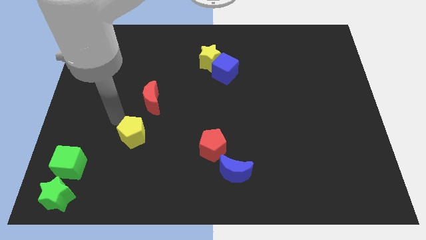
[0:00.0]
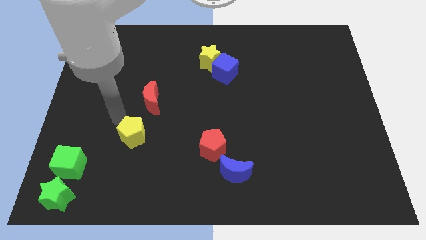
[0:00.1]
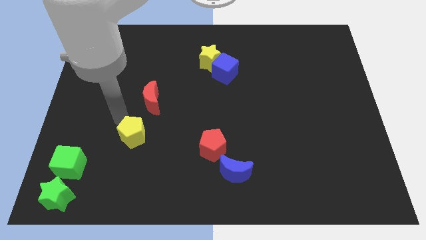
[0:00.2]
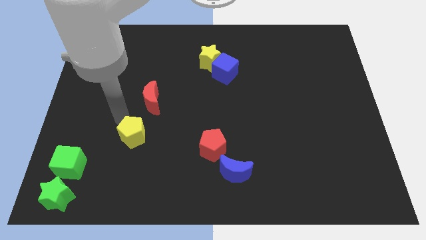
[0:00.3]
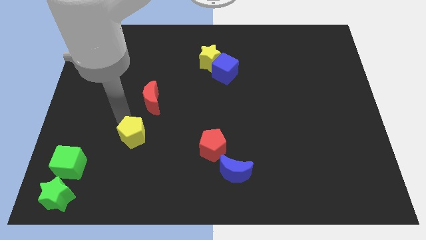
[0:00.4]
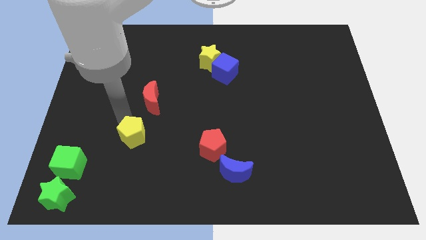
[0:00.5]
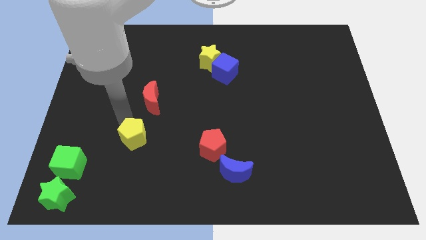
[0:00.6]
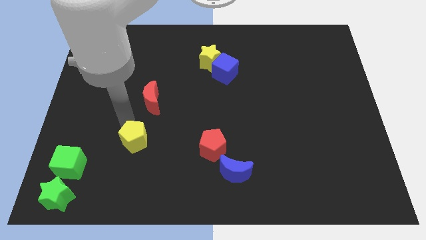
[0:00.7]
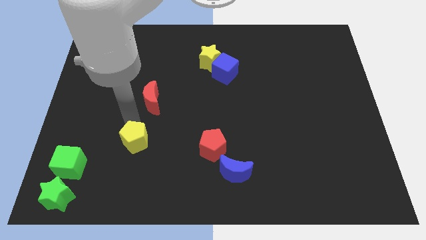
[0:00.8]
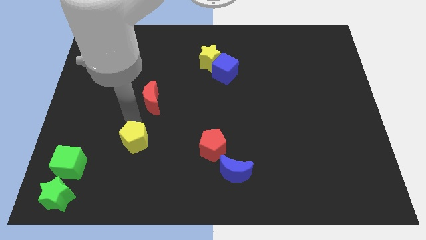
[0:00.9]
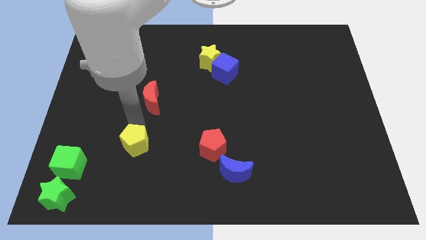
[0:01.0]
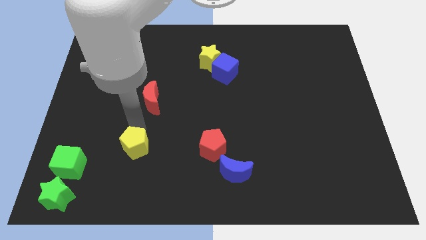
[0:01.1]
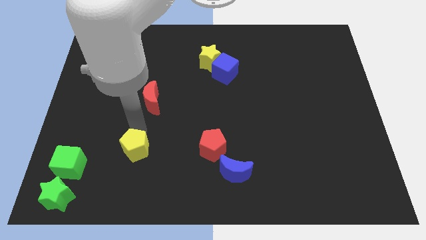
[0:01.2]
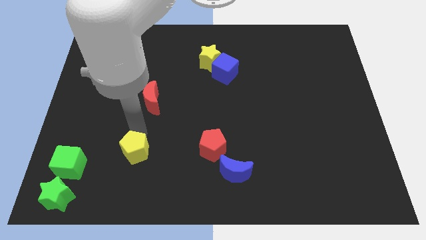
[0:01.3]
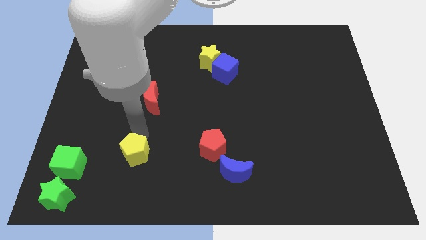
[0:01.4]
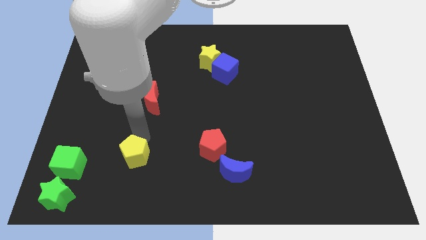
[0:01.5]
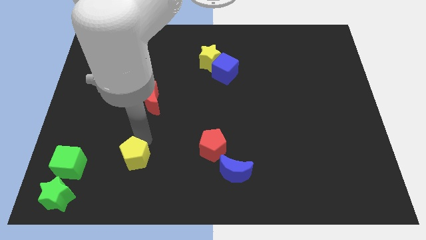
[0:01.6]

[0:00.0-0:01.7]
place the yellow pentagon horizontally to the right side of the green cube

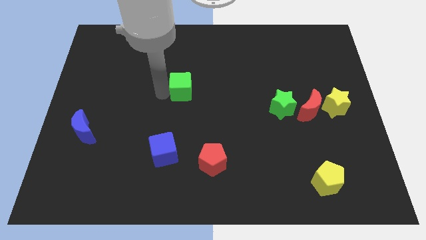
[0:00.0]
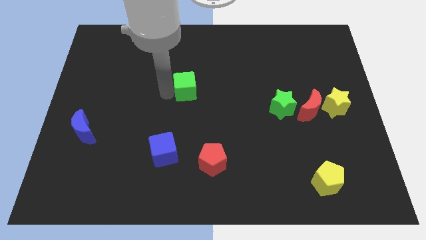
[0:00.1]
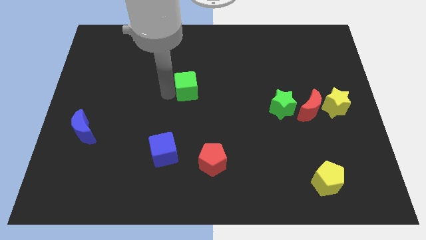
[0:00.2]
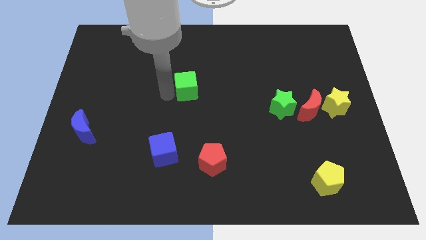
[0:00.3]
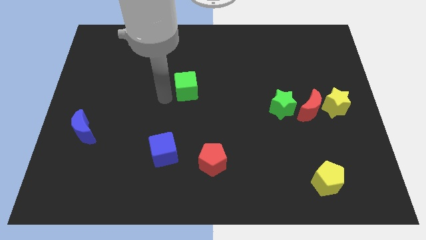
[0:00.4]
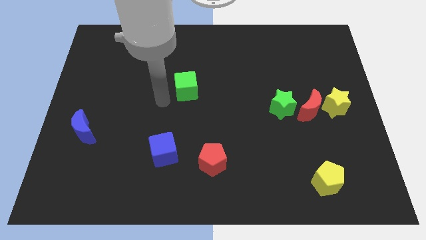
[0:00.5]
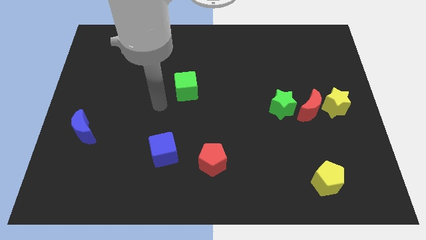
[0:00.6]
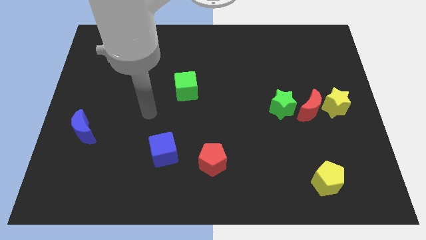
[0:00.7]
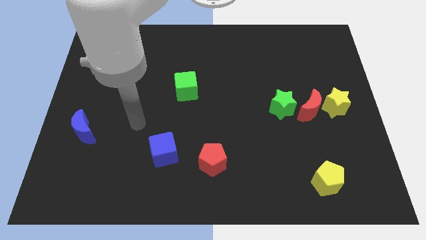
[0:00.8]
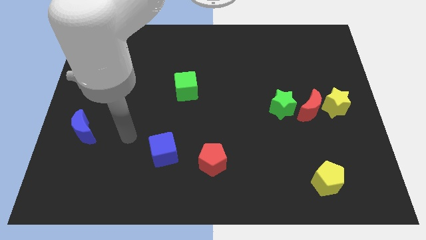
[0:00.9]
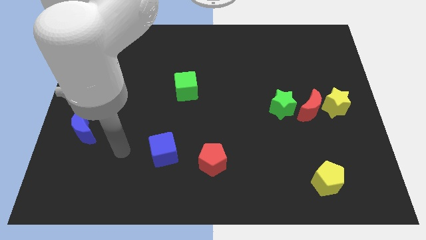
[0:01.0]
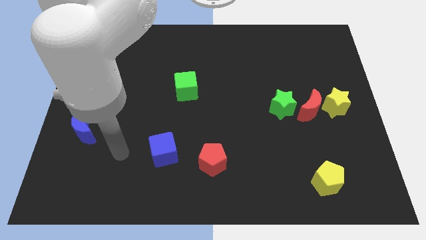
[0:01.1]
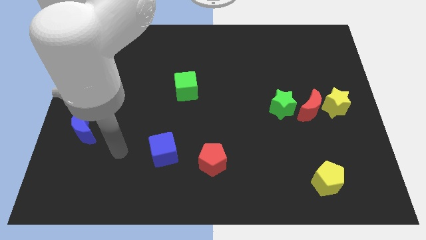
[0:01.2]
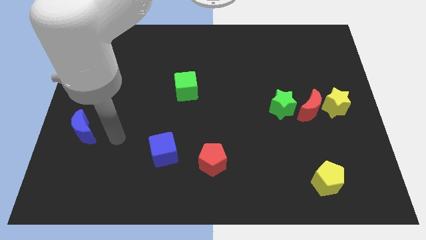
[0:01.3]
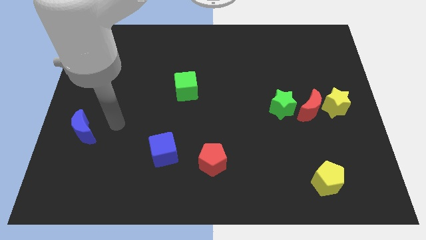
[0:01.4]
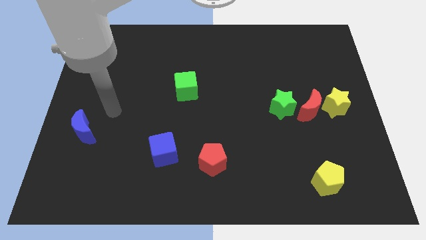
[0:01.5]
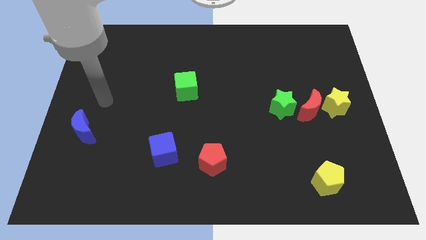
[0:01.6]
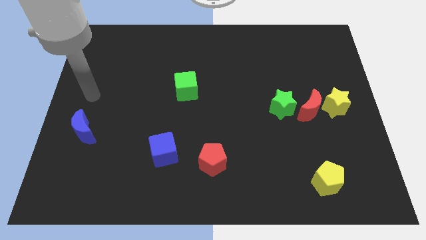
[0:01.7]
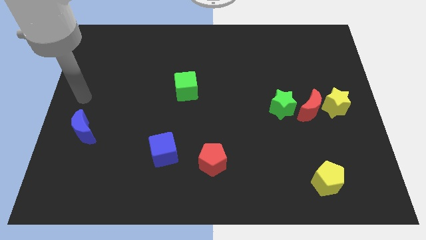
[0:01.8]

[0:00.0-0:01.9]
move your arm away from the green cube

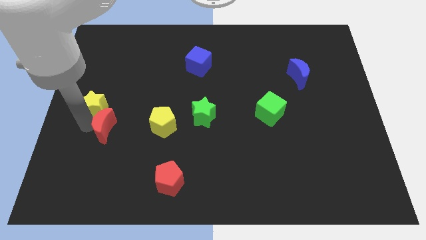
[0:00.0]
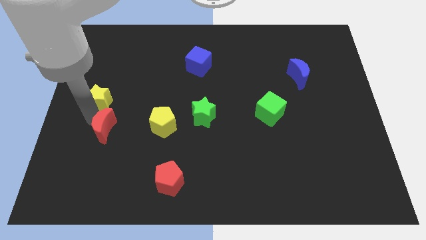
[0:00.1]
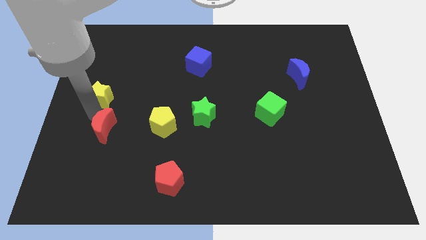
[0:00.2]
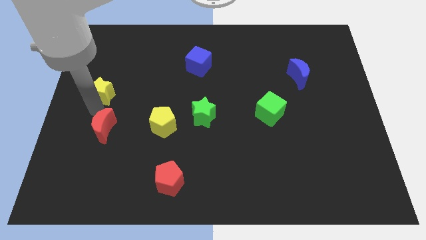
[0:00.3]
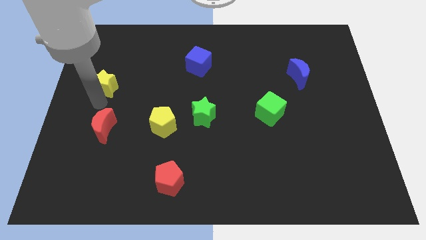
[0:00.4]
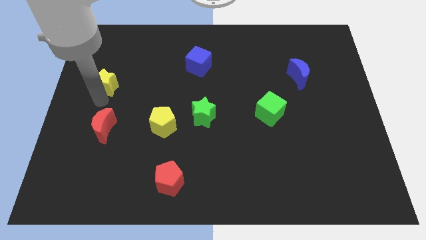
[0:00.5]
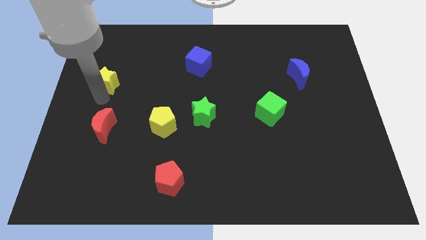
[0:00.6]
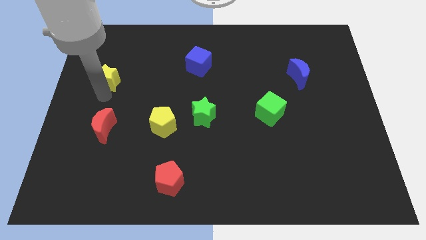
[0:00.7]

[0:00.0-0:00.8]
push yellow star slightly towards upwards

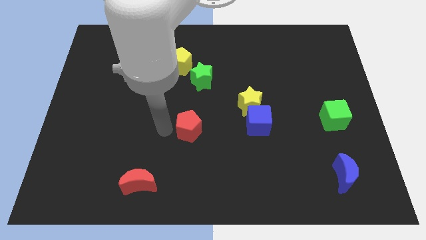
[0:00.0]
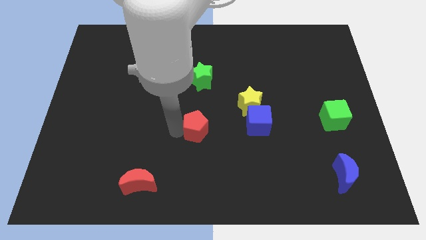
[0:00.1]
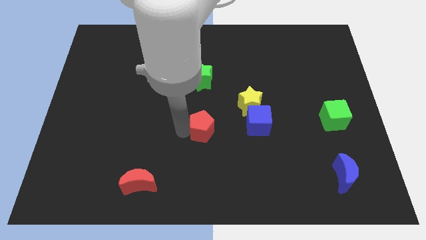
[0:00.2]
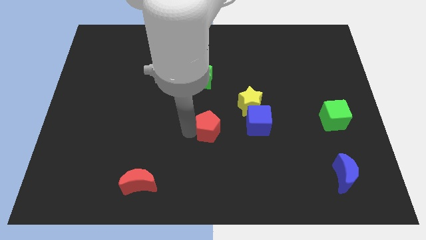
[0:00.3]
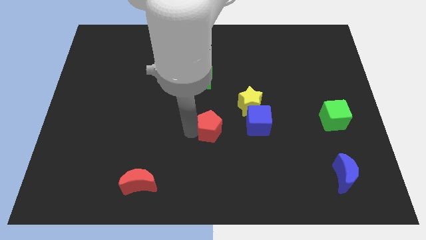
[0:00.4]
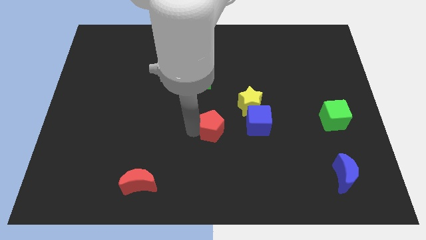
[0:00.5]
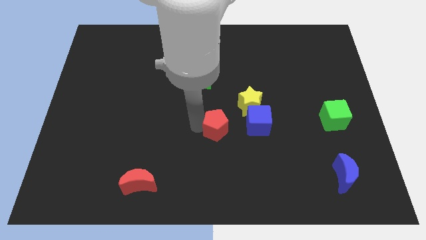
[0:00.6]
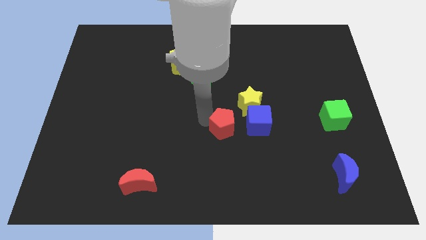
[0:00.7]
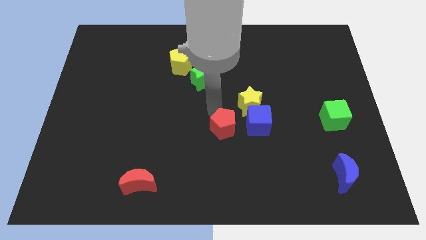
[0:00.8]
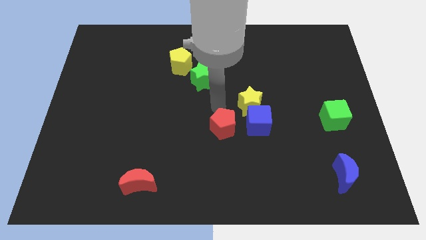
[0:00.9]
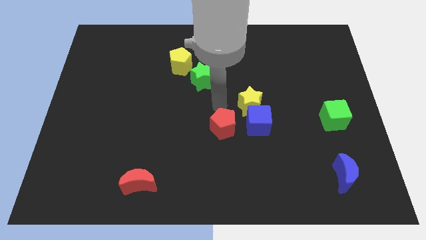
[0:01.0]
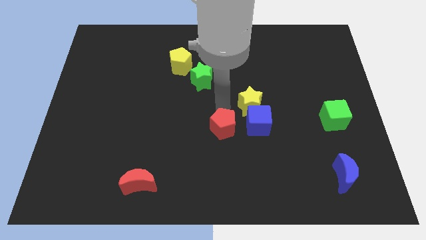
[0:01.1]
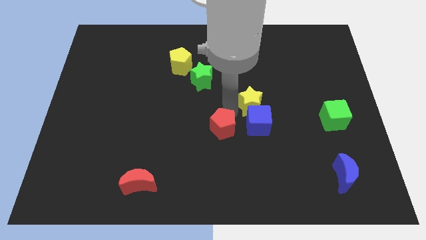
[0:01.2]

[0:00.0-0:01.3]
move the red pentagon near to the blue cube

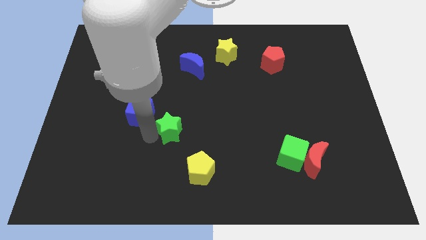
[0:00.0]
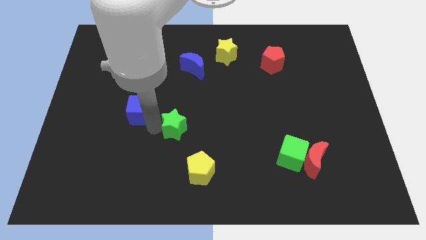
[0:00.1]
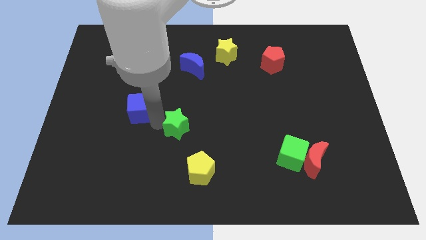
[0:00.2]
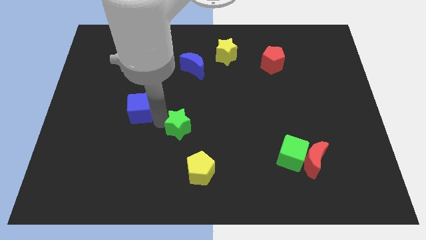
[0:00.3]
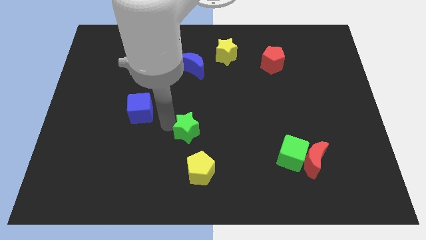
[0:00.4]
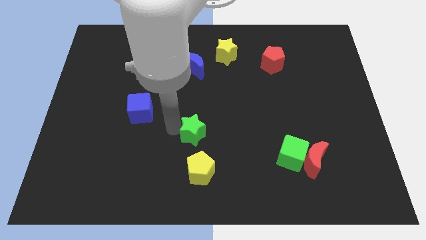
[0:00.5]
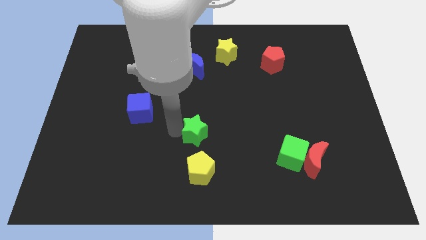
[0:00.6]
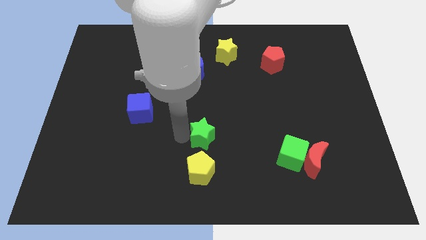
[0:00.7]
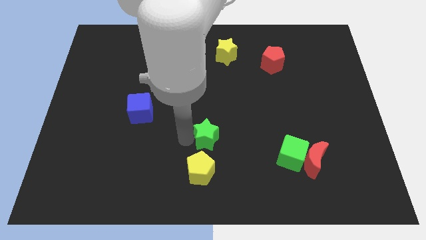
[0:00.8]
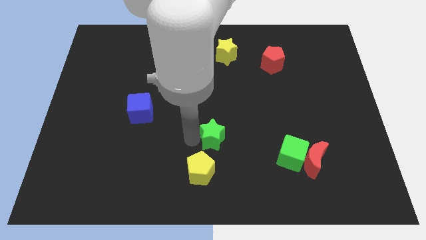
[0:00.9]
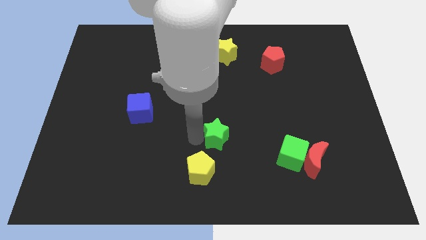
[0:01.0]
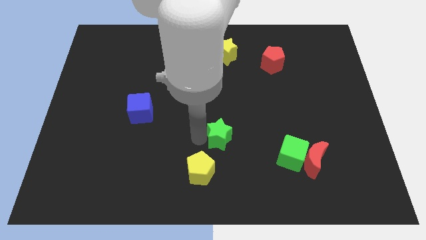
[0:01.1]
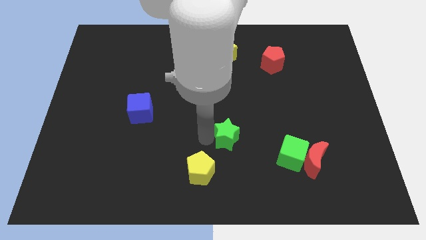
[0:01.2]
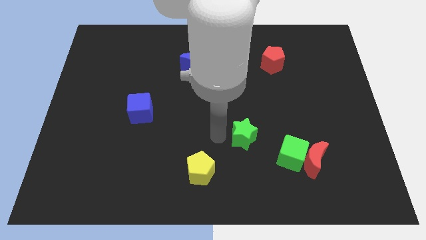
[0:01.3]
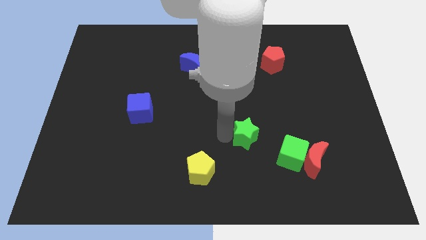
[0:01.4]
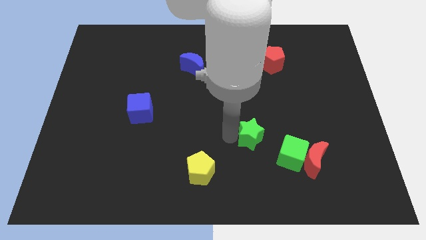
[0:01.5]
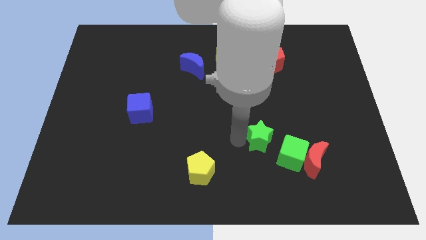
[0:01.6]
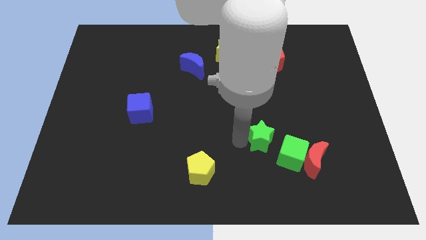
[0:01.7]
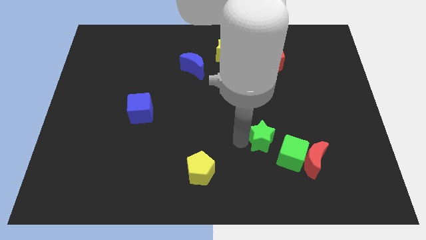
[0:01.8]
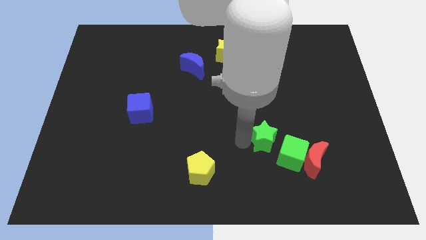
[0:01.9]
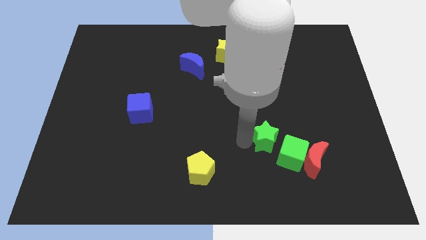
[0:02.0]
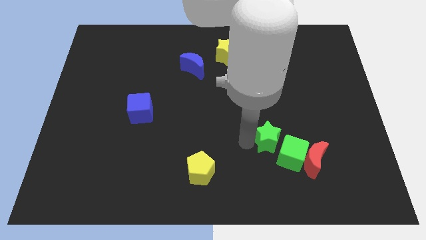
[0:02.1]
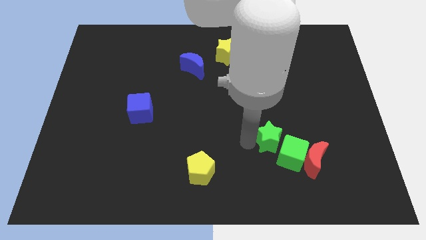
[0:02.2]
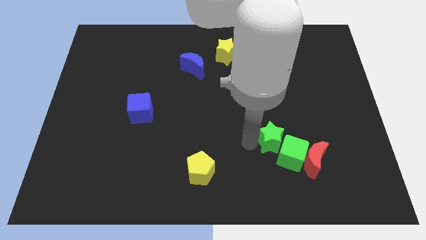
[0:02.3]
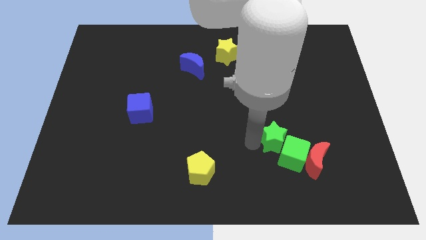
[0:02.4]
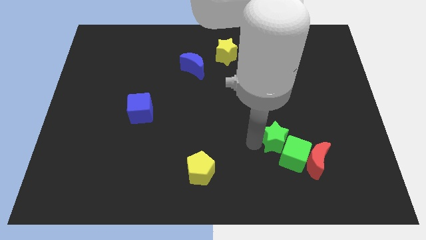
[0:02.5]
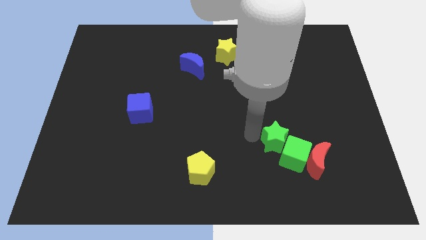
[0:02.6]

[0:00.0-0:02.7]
place the green star into the green cube

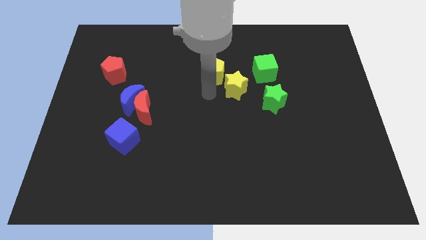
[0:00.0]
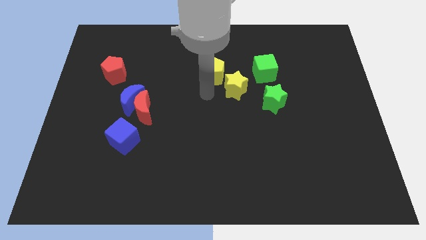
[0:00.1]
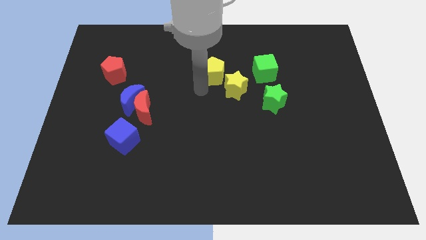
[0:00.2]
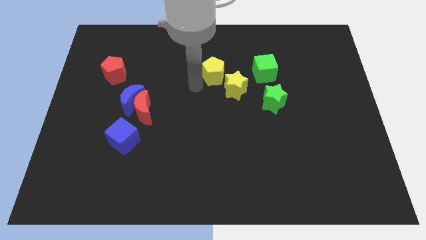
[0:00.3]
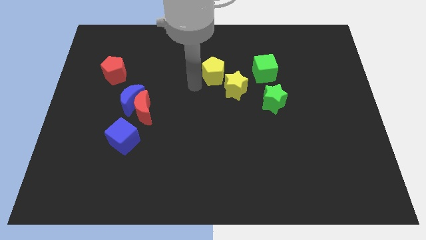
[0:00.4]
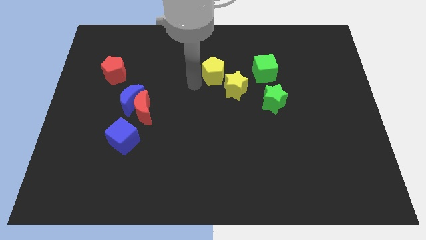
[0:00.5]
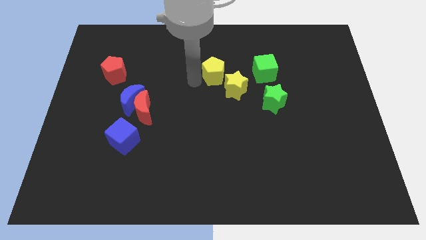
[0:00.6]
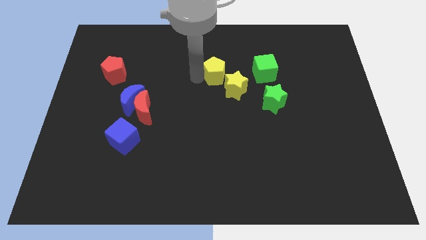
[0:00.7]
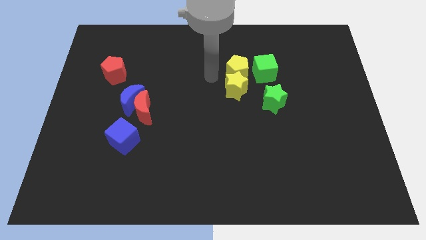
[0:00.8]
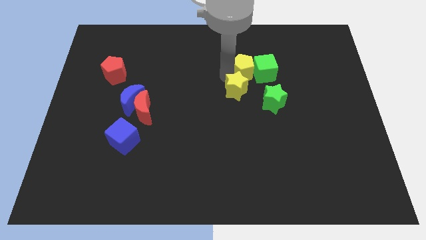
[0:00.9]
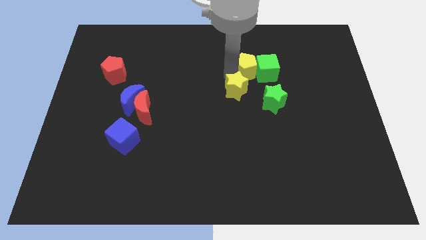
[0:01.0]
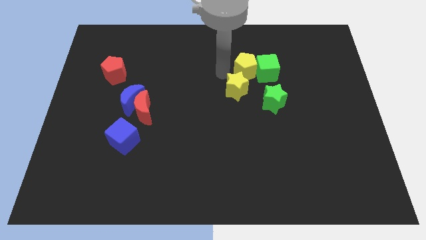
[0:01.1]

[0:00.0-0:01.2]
push yellow pentagon in to green cube
